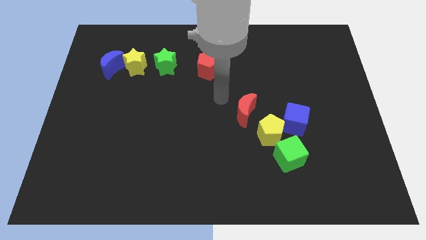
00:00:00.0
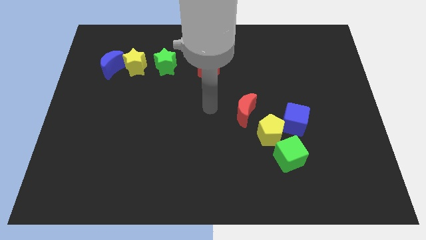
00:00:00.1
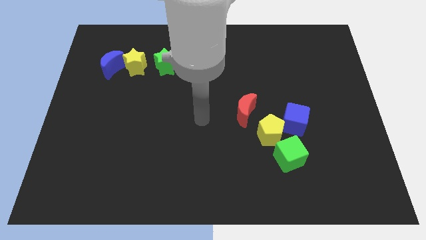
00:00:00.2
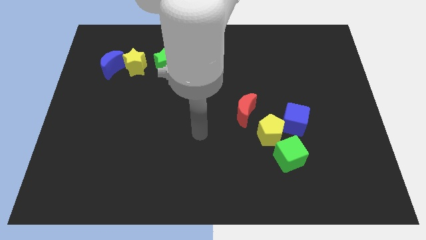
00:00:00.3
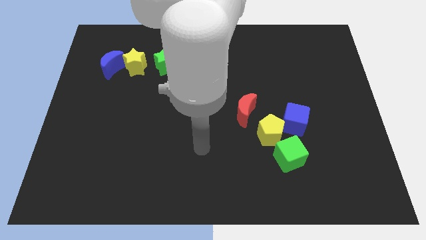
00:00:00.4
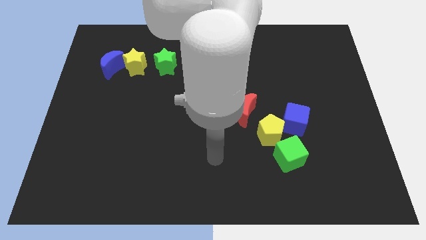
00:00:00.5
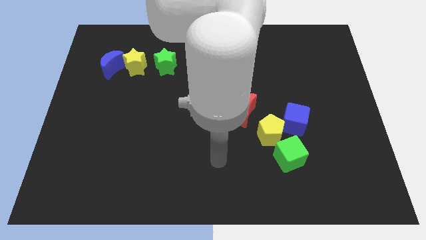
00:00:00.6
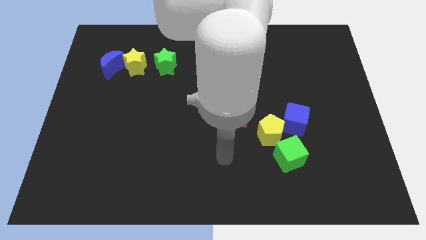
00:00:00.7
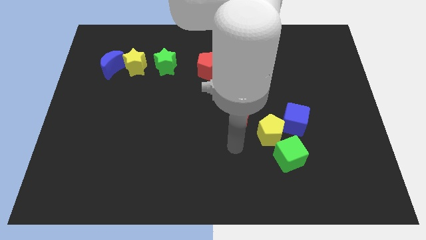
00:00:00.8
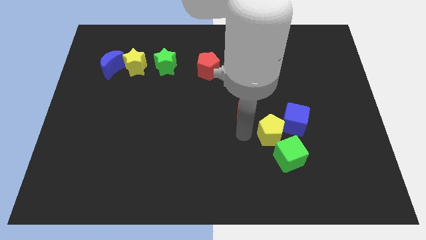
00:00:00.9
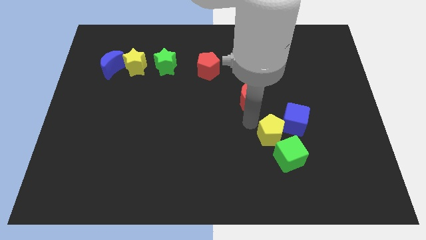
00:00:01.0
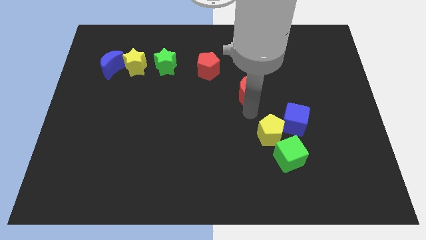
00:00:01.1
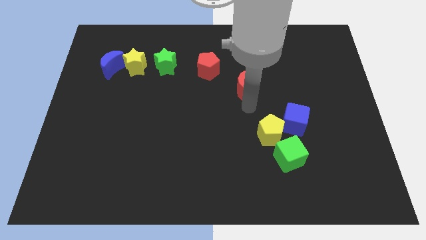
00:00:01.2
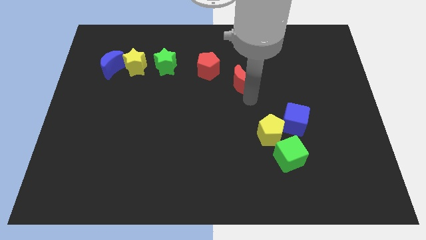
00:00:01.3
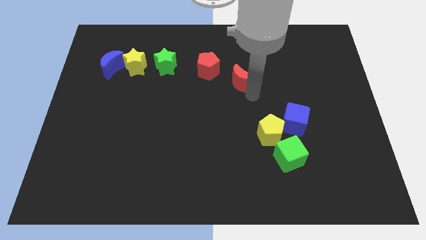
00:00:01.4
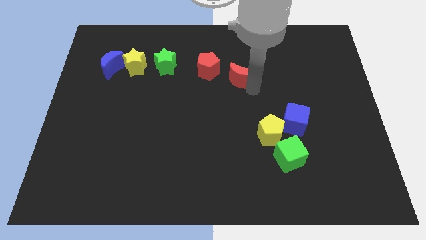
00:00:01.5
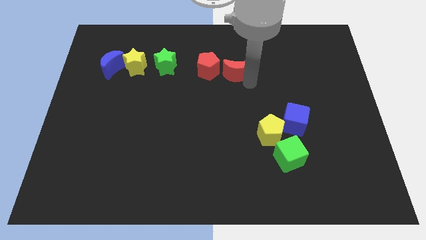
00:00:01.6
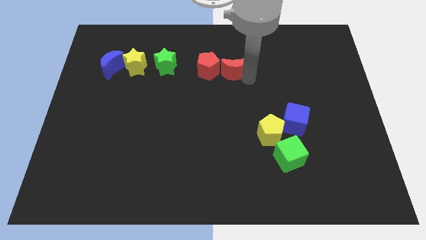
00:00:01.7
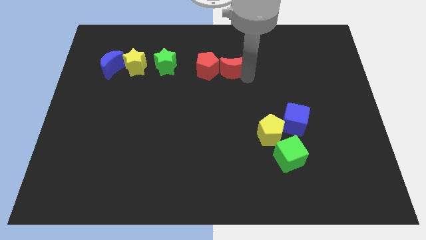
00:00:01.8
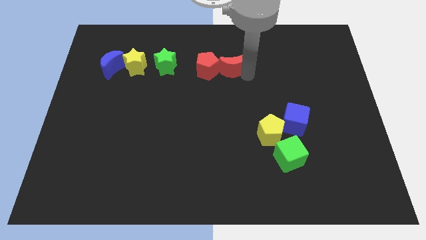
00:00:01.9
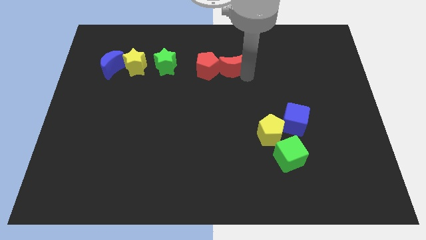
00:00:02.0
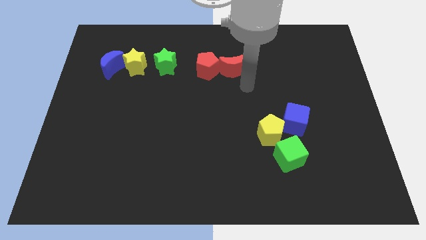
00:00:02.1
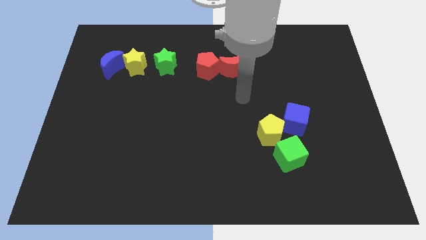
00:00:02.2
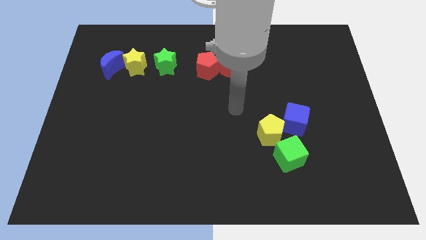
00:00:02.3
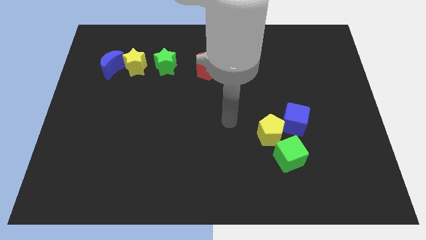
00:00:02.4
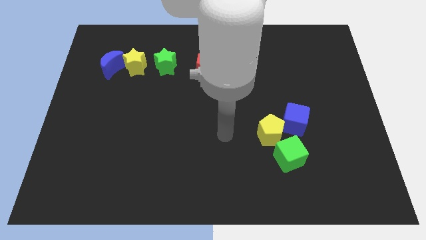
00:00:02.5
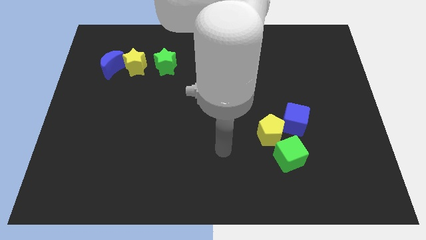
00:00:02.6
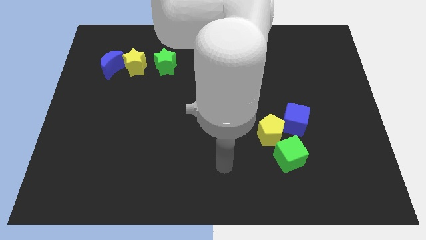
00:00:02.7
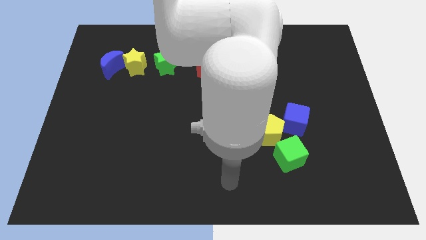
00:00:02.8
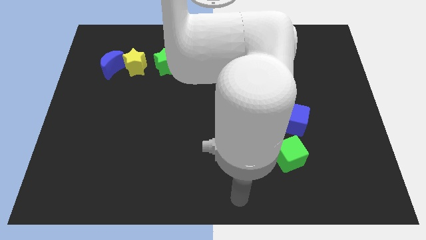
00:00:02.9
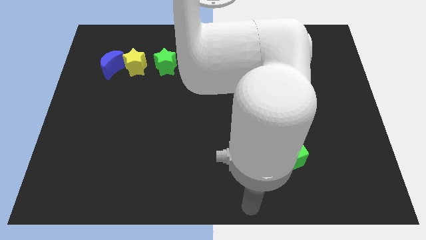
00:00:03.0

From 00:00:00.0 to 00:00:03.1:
move red crescent close to red pentagon

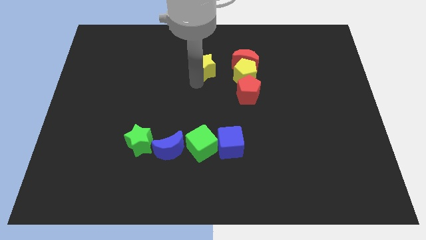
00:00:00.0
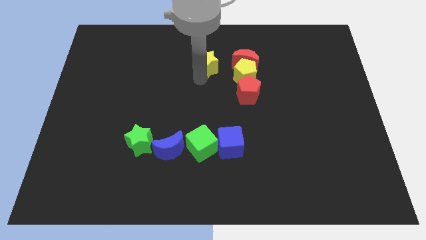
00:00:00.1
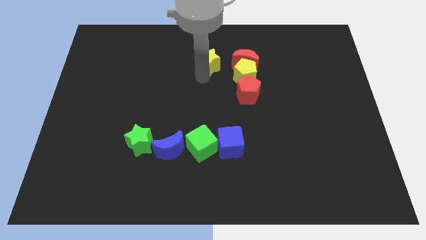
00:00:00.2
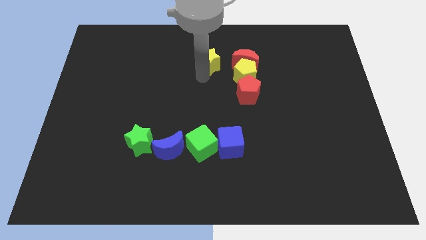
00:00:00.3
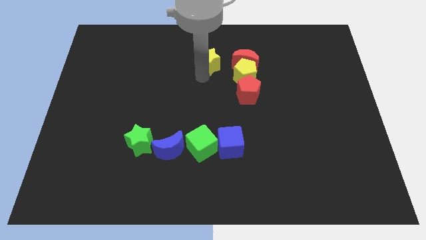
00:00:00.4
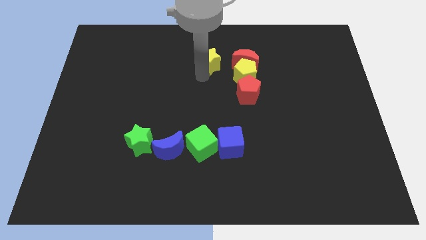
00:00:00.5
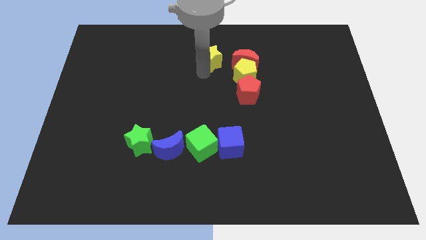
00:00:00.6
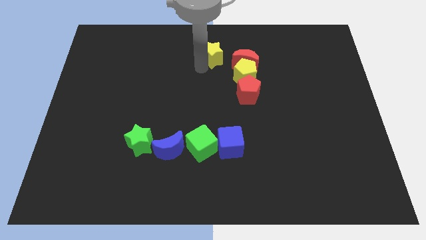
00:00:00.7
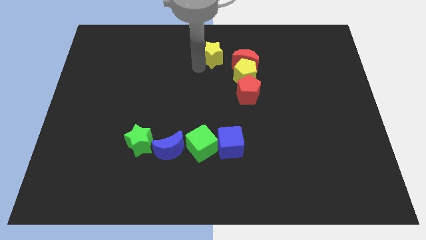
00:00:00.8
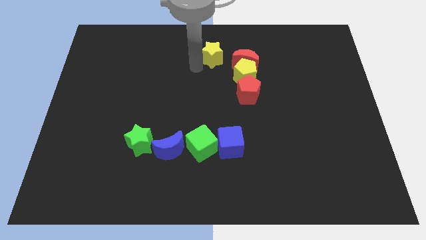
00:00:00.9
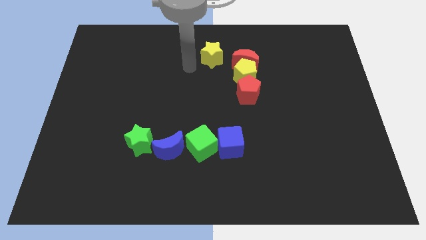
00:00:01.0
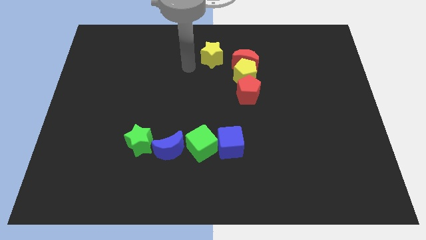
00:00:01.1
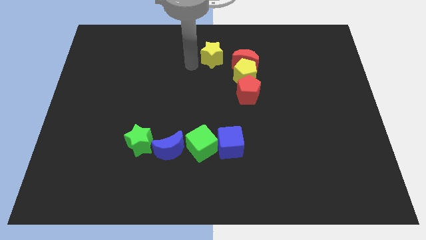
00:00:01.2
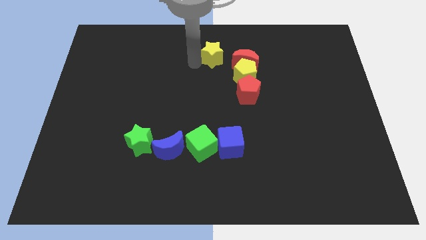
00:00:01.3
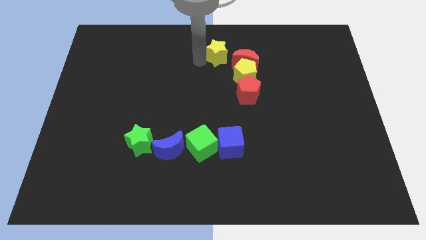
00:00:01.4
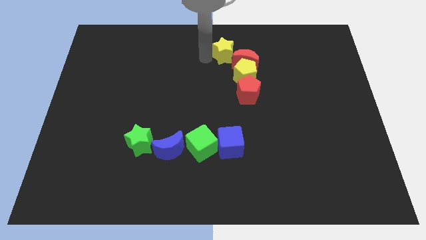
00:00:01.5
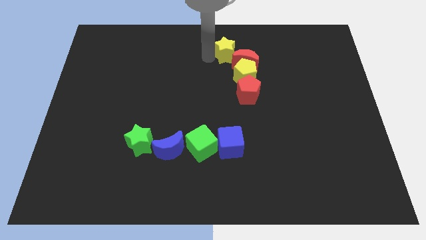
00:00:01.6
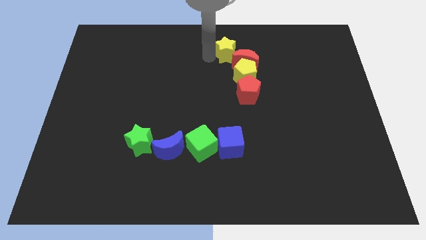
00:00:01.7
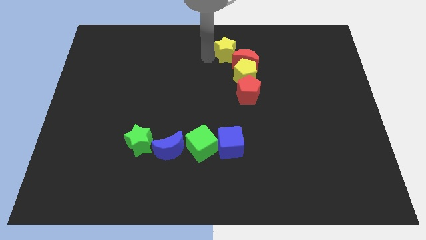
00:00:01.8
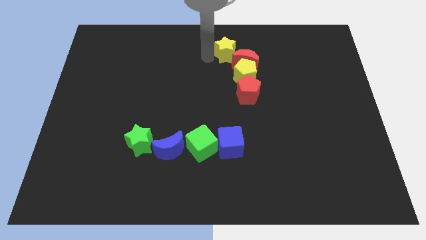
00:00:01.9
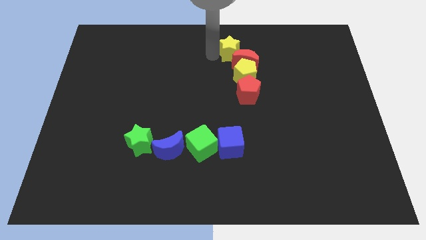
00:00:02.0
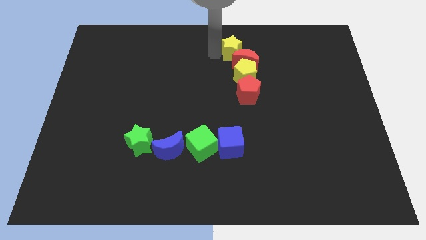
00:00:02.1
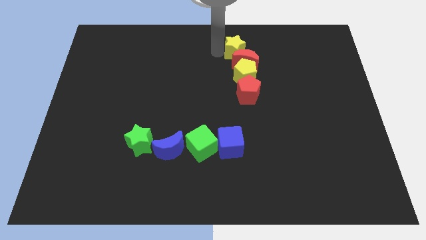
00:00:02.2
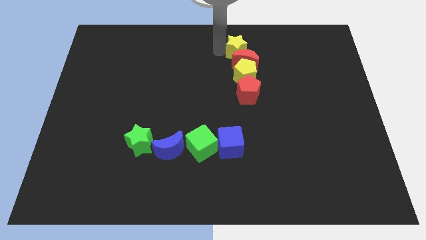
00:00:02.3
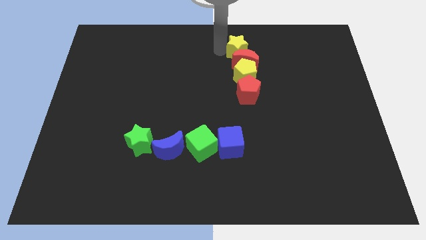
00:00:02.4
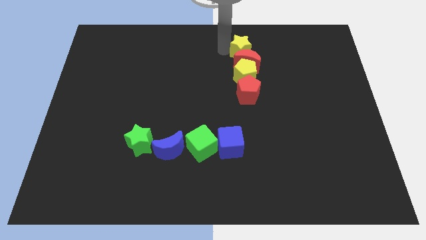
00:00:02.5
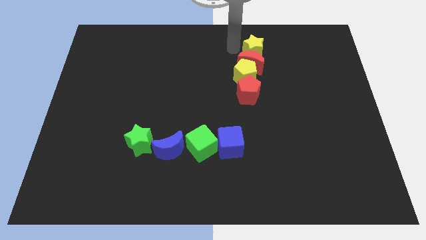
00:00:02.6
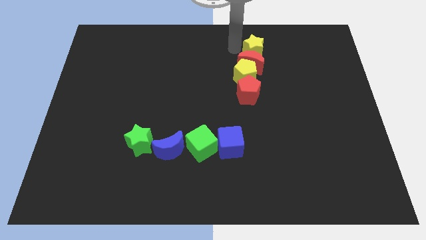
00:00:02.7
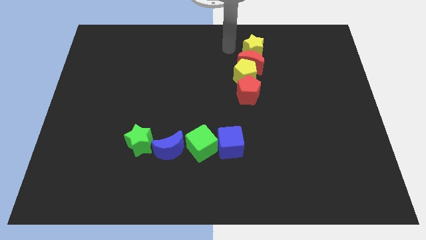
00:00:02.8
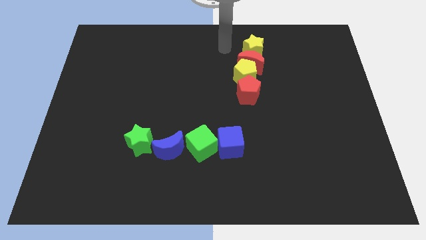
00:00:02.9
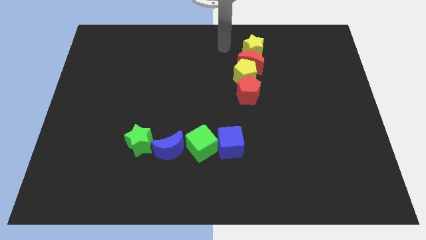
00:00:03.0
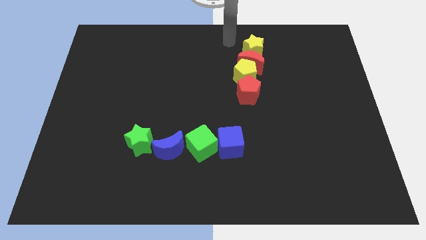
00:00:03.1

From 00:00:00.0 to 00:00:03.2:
push the yellow star into the red moon

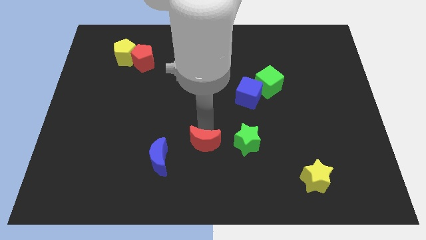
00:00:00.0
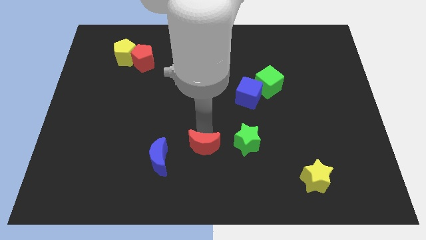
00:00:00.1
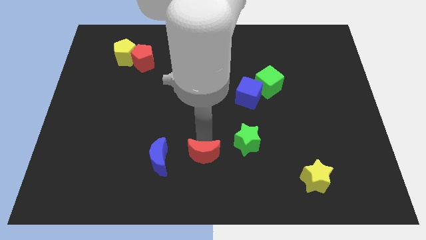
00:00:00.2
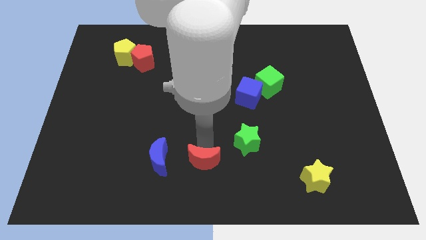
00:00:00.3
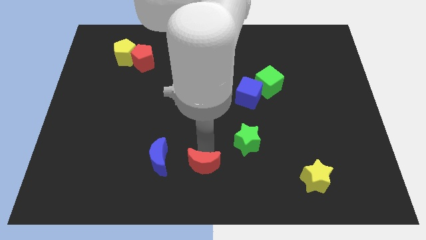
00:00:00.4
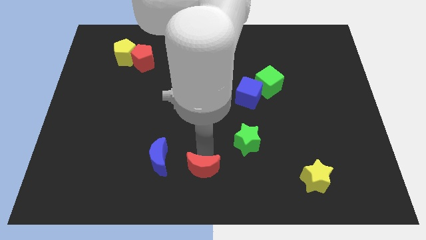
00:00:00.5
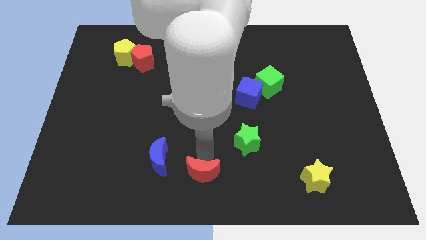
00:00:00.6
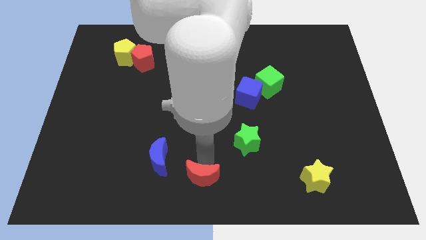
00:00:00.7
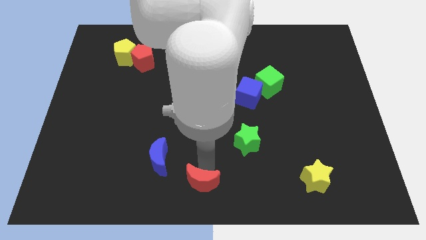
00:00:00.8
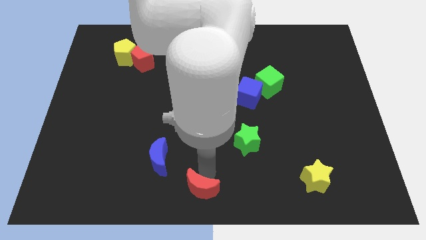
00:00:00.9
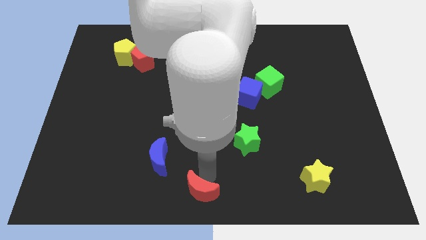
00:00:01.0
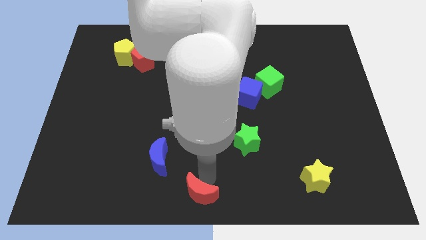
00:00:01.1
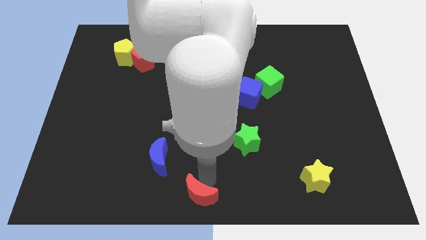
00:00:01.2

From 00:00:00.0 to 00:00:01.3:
push the red crescent to the bottom of the board

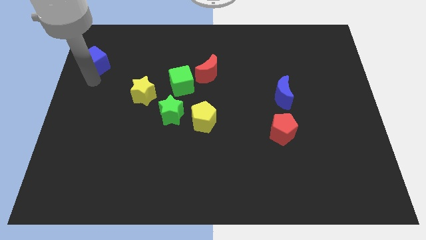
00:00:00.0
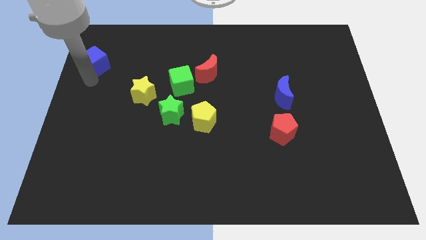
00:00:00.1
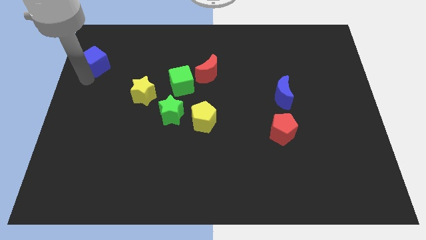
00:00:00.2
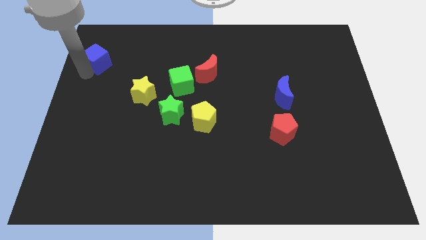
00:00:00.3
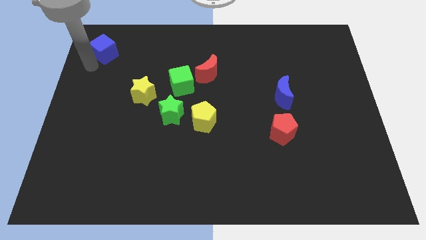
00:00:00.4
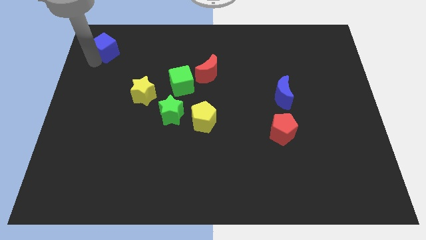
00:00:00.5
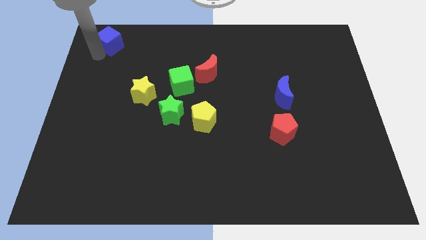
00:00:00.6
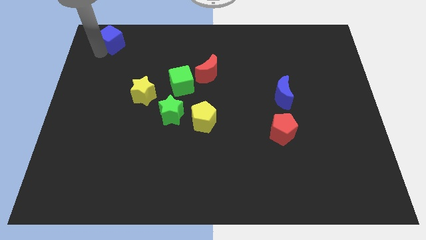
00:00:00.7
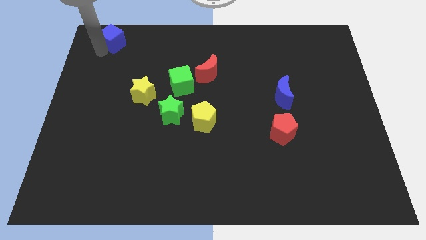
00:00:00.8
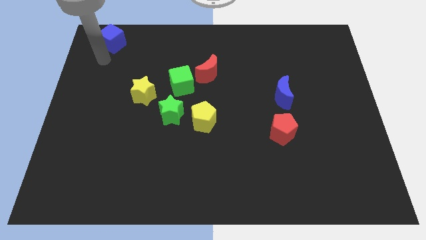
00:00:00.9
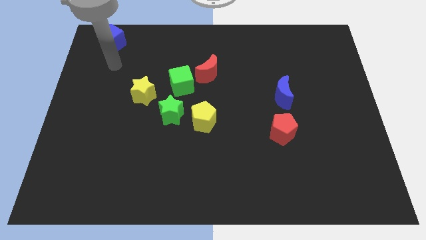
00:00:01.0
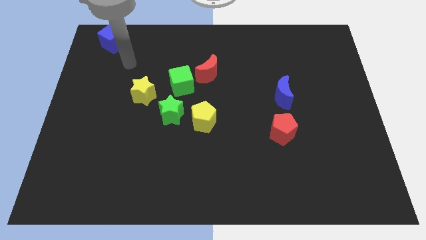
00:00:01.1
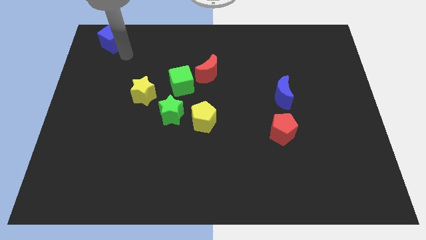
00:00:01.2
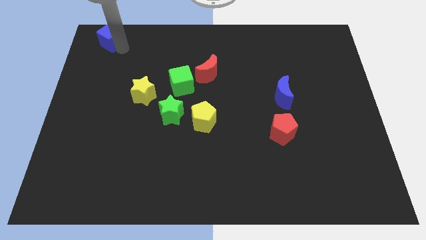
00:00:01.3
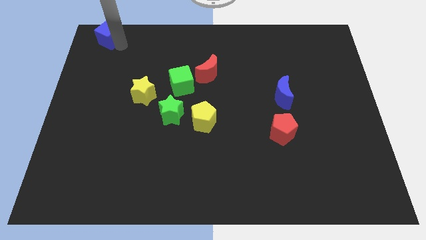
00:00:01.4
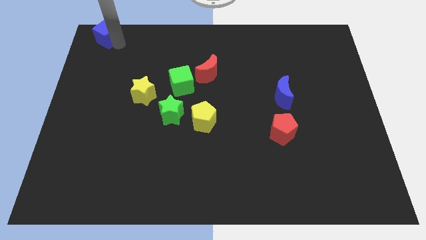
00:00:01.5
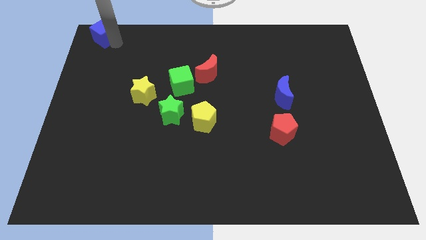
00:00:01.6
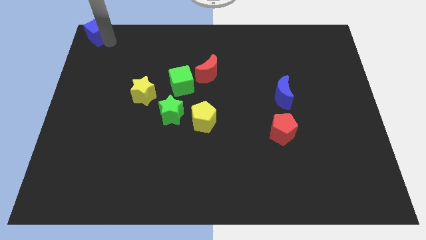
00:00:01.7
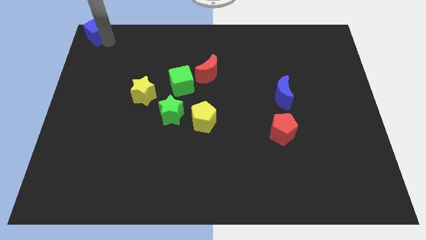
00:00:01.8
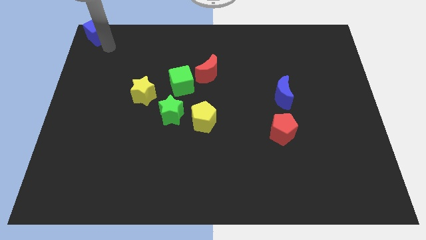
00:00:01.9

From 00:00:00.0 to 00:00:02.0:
push the blue cube to the top left corner of the board
